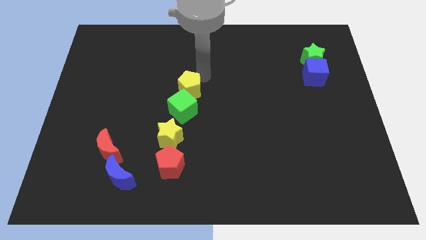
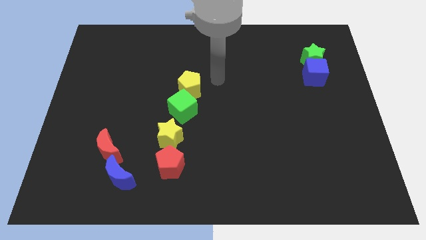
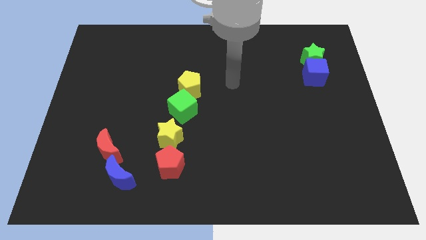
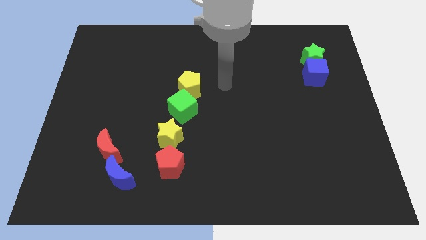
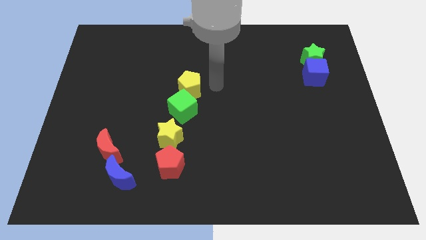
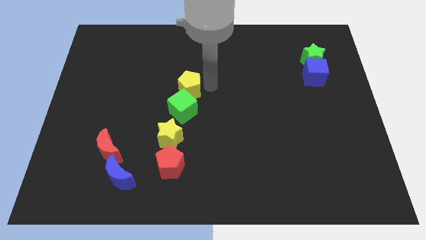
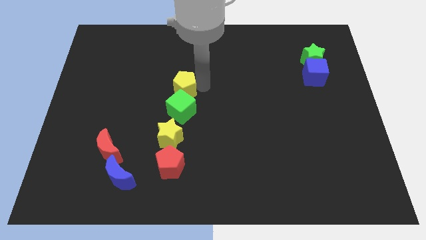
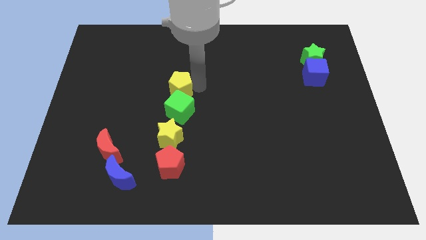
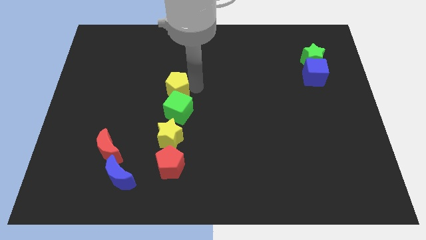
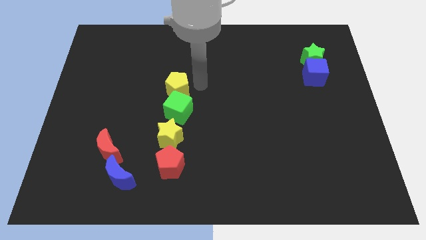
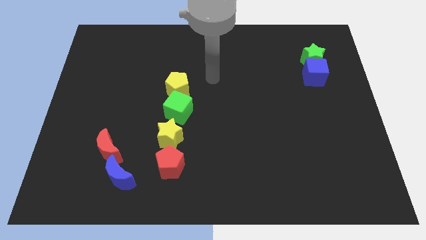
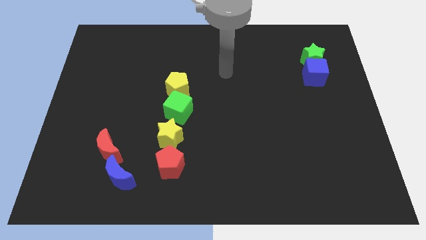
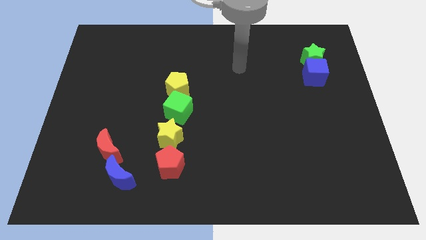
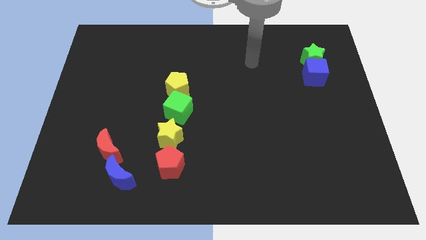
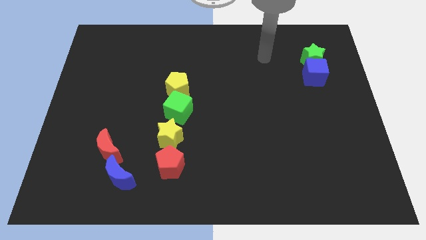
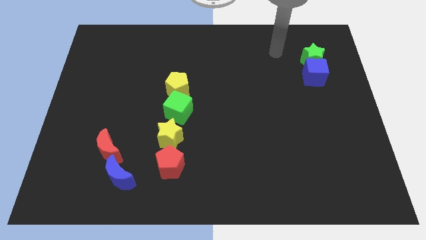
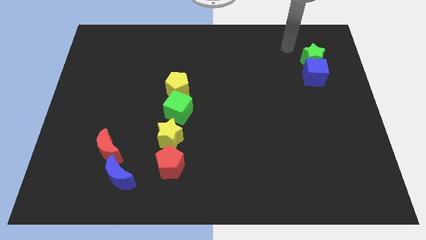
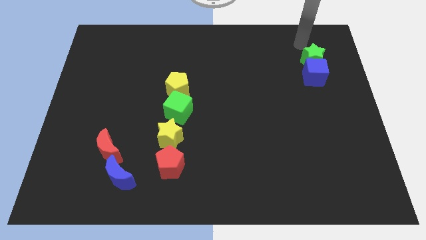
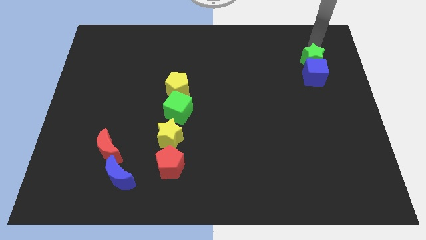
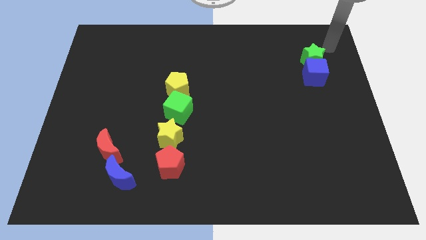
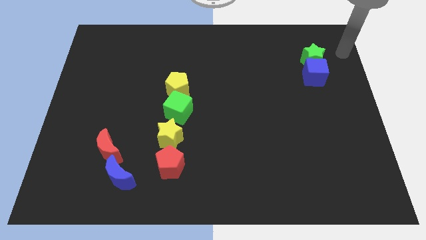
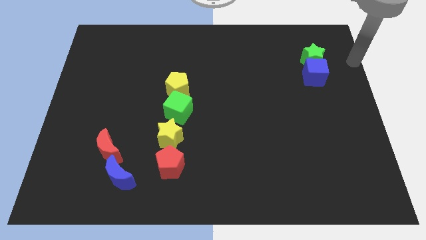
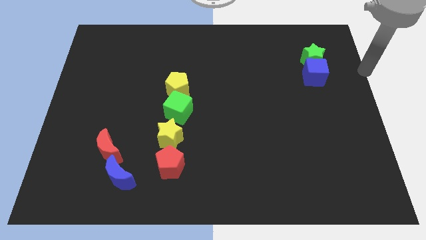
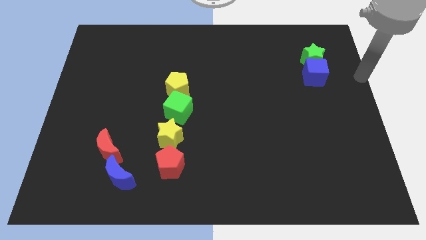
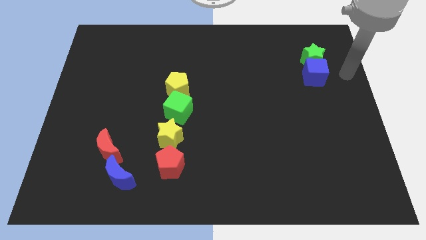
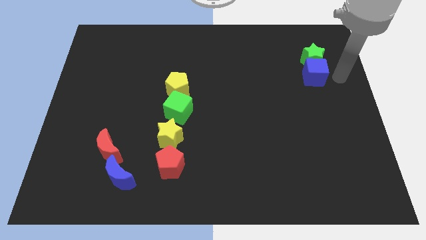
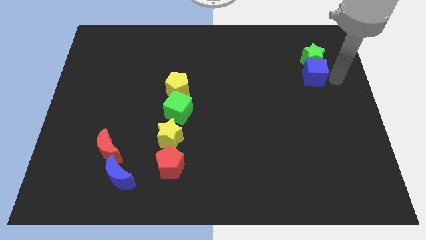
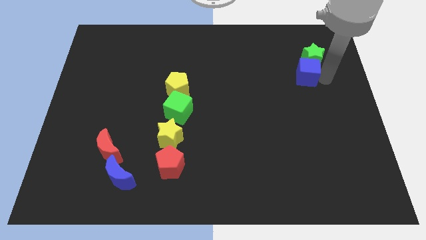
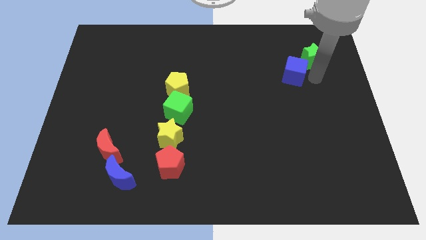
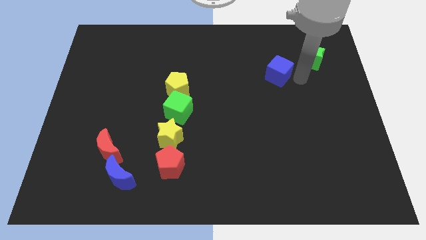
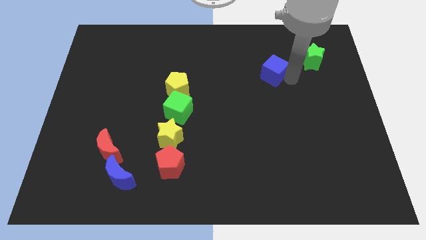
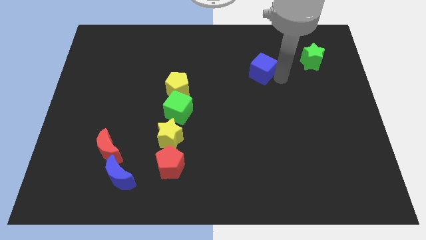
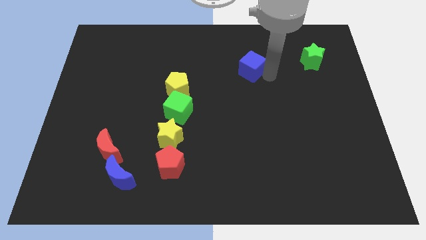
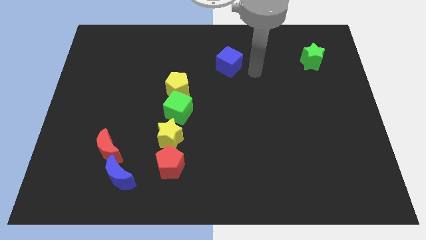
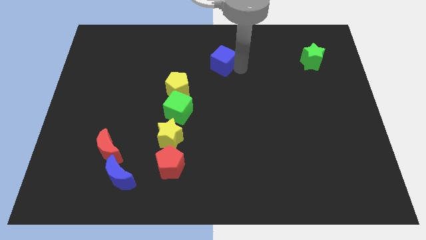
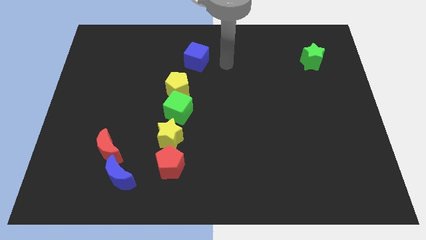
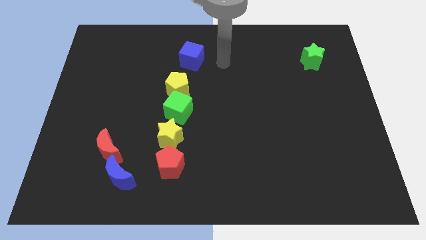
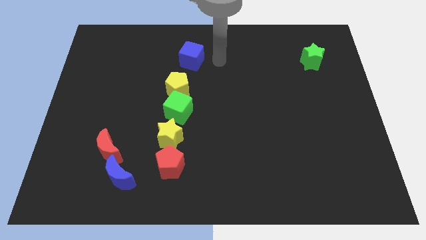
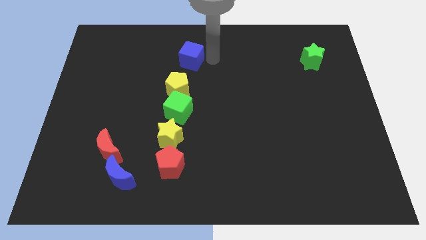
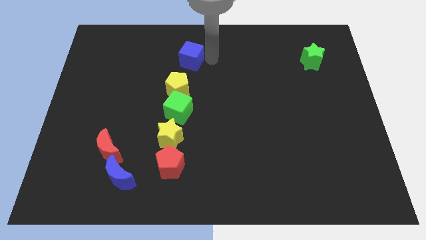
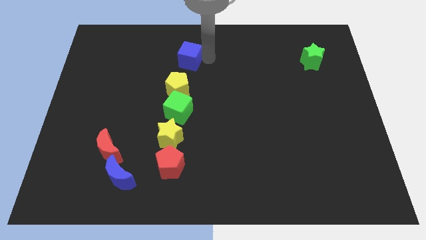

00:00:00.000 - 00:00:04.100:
put the blue cube above the yellow pentagon

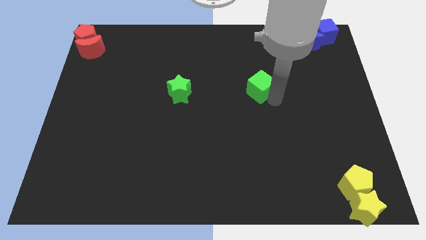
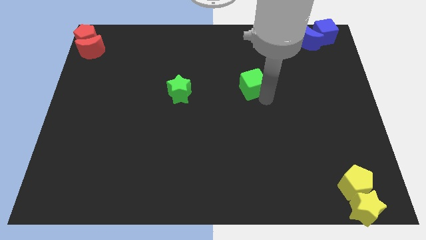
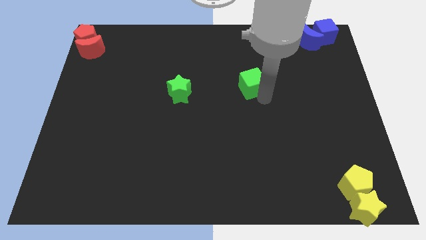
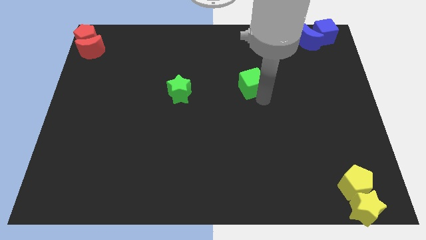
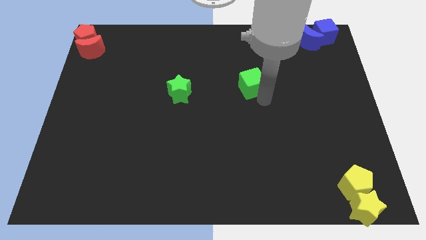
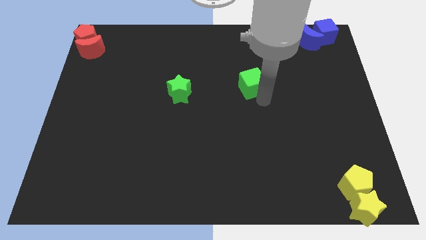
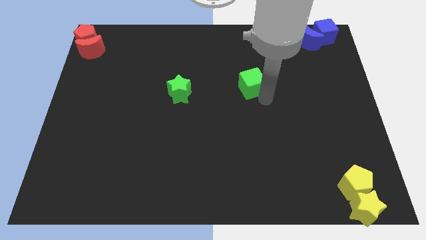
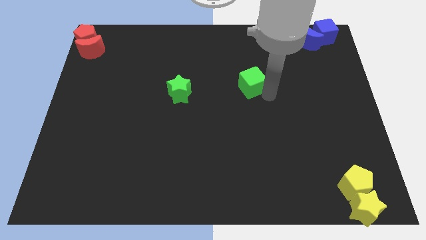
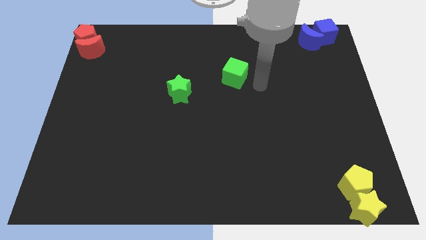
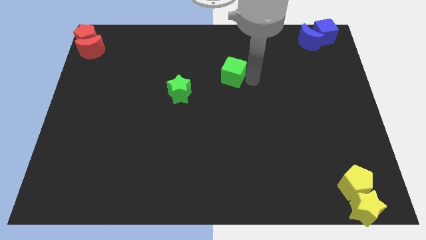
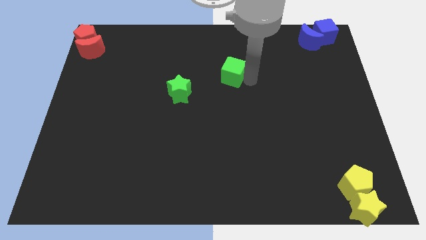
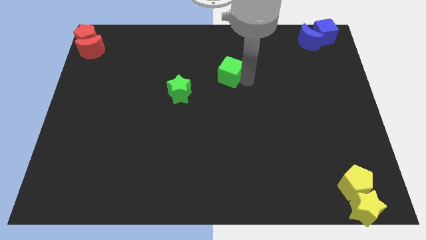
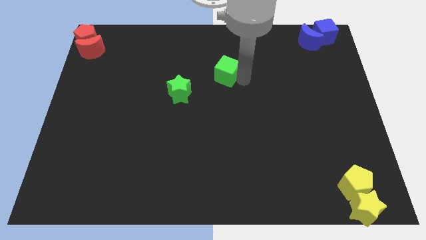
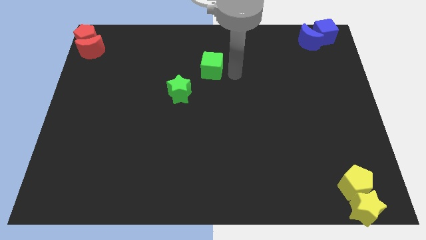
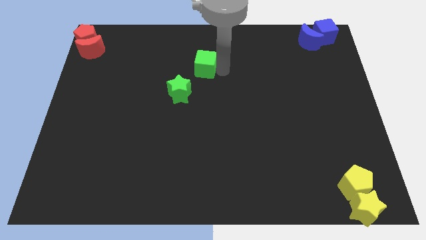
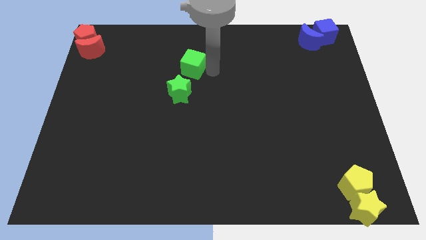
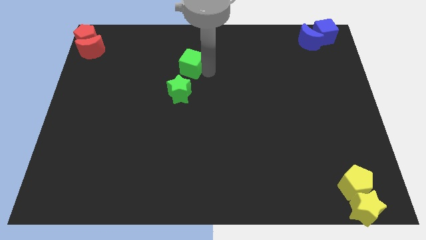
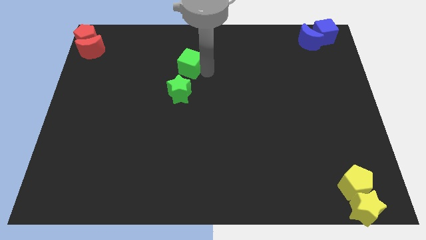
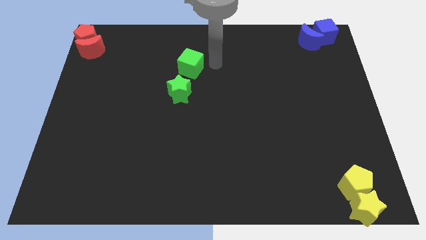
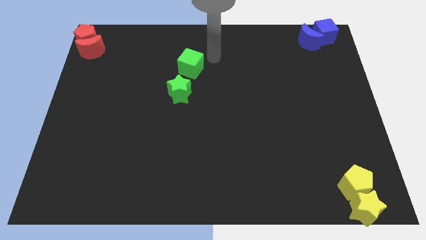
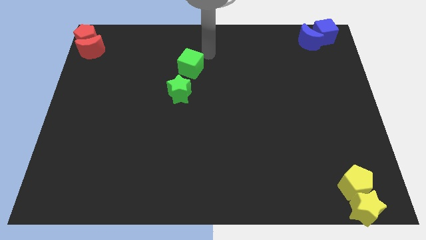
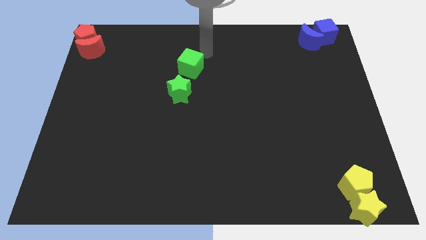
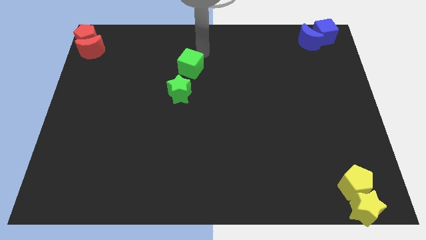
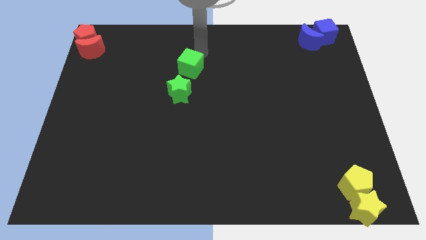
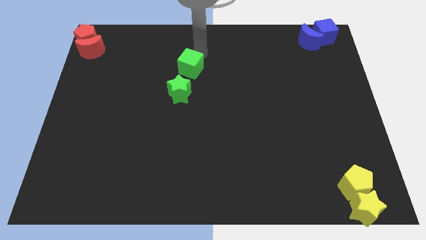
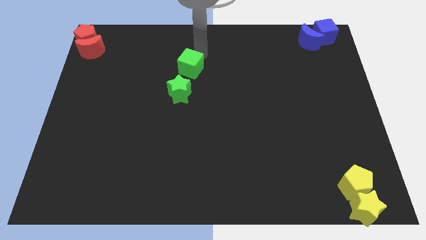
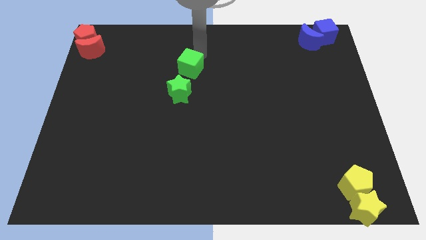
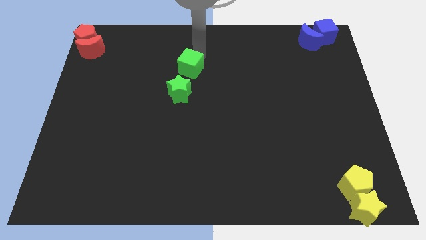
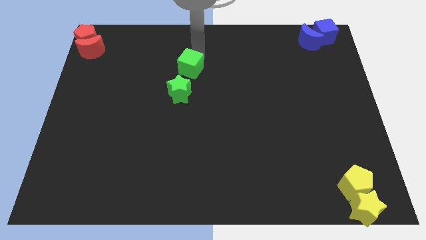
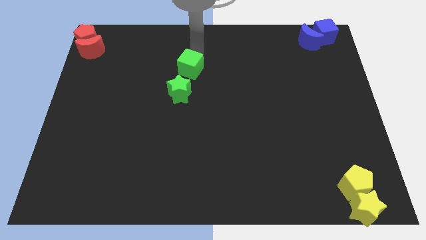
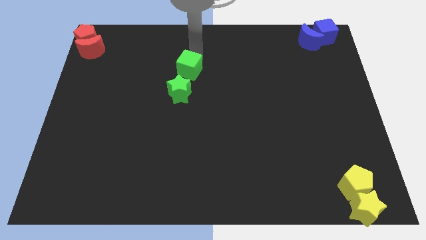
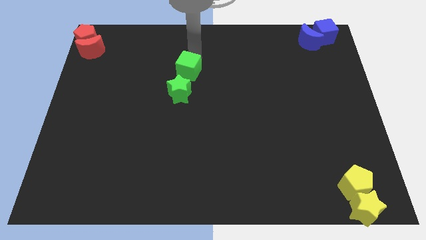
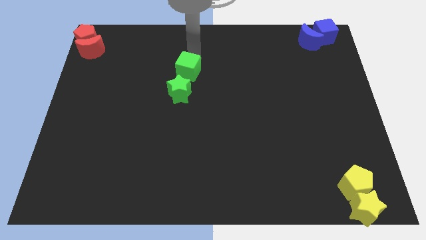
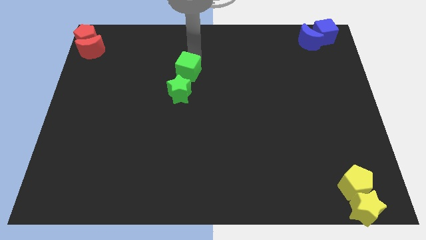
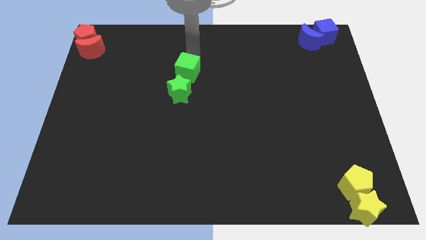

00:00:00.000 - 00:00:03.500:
move the green cube to the top of the green star

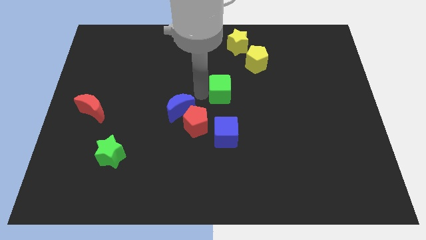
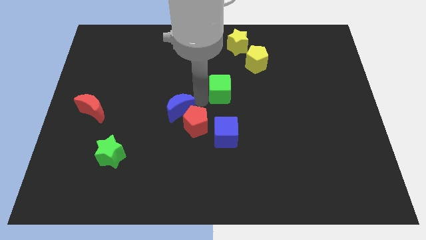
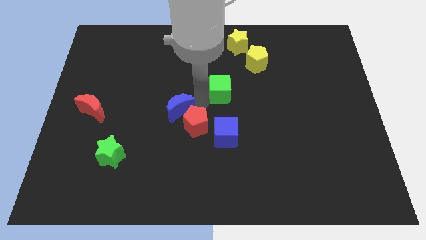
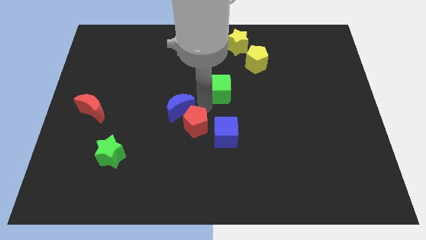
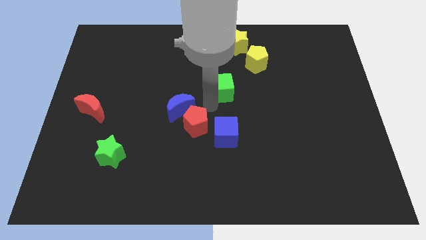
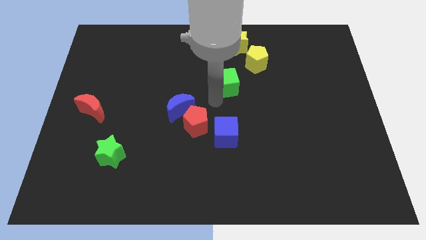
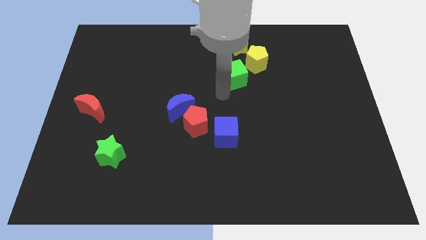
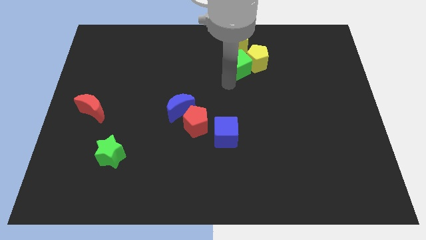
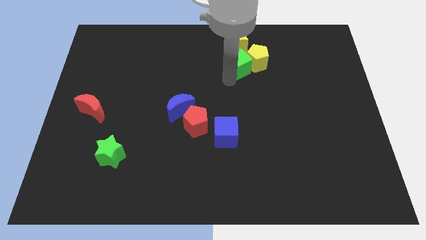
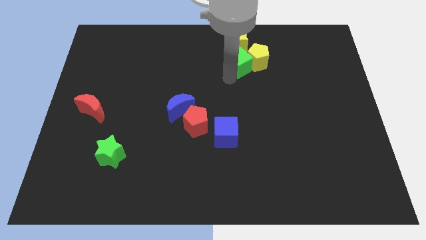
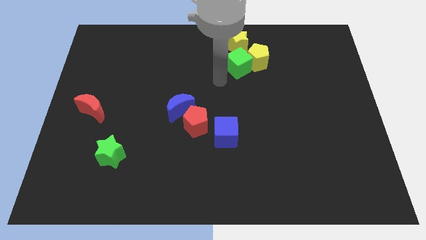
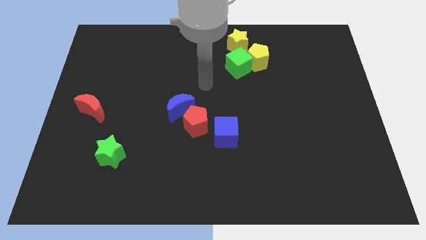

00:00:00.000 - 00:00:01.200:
move the green cube below to the yellow star

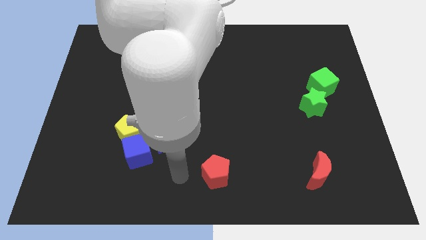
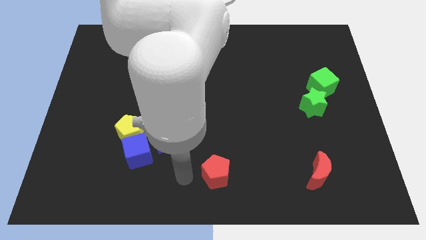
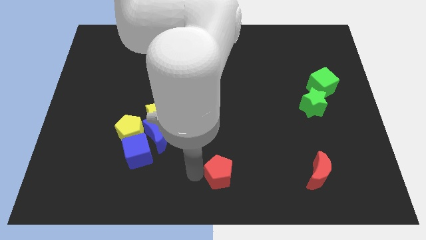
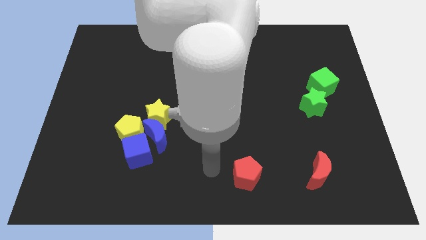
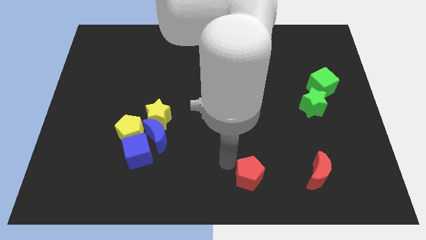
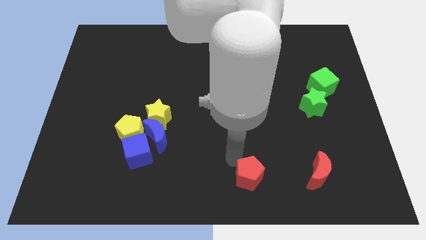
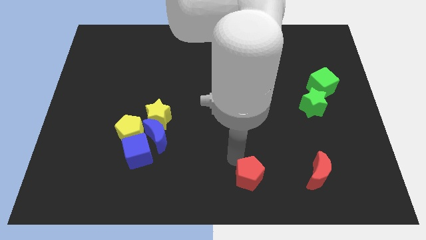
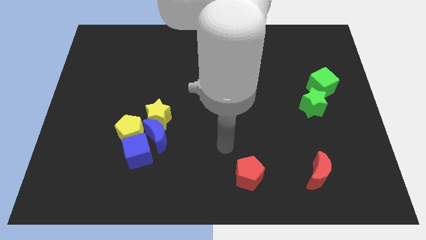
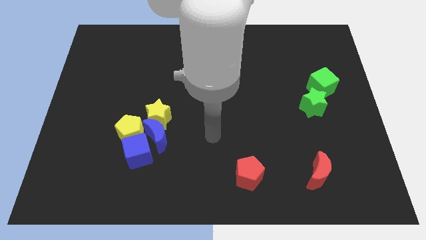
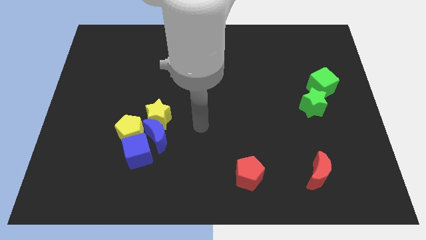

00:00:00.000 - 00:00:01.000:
move the red pentagon to the right of the board
